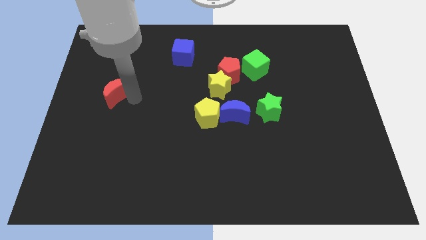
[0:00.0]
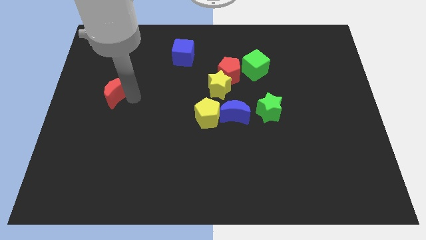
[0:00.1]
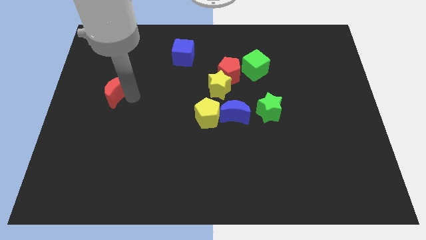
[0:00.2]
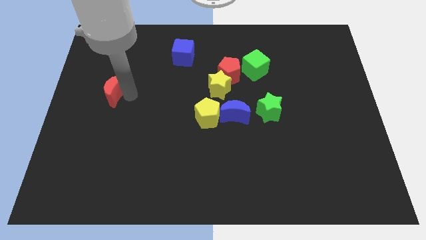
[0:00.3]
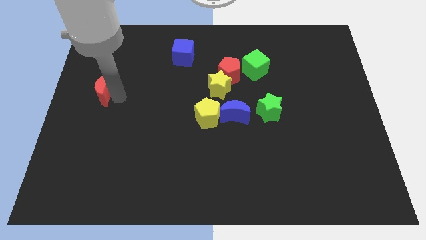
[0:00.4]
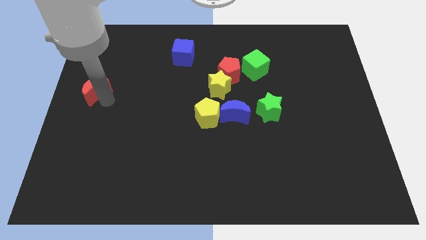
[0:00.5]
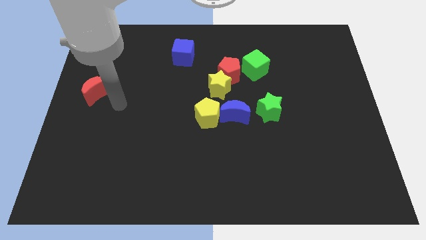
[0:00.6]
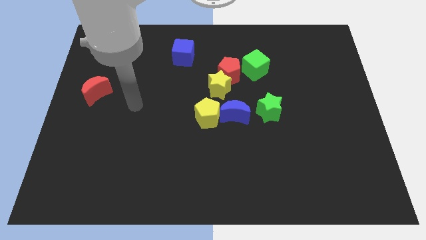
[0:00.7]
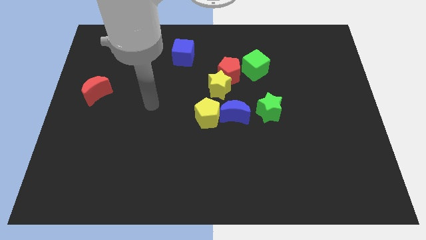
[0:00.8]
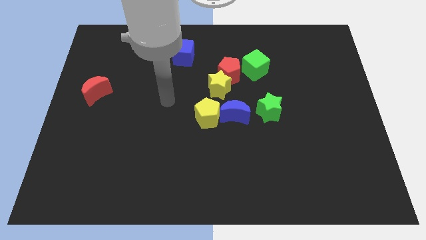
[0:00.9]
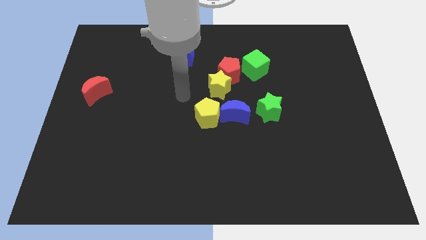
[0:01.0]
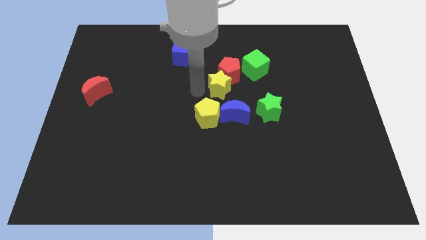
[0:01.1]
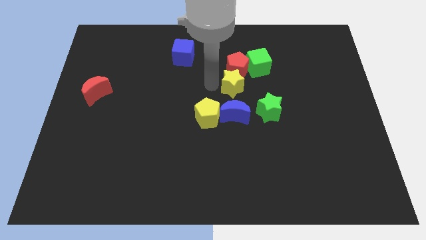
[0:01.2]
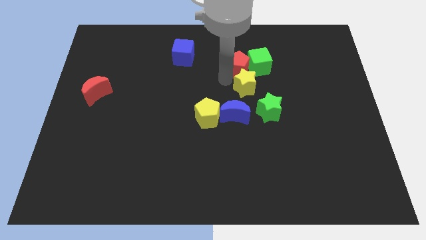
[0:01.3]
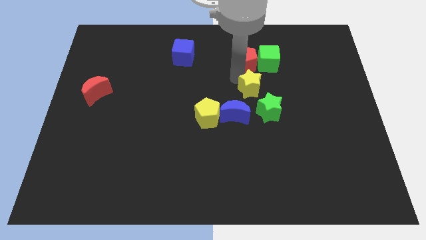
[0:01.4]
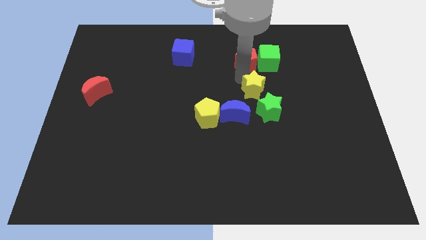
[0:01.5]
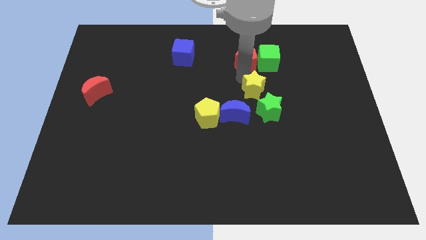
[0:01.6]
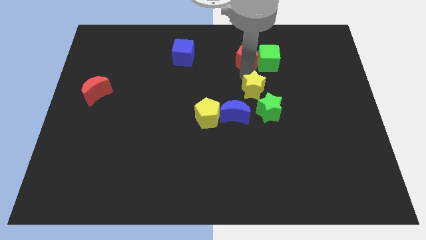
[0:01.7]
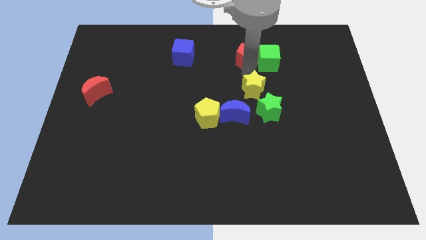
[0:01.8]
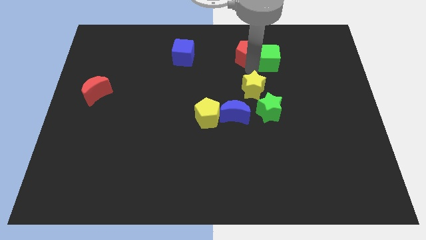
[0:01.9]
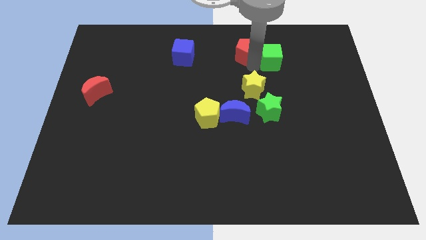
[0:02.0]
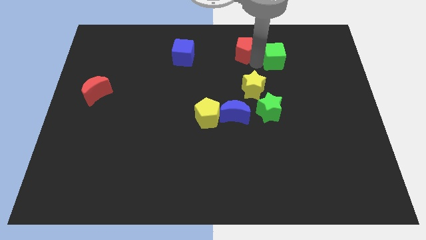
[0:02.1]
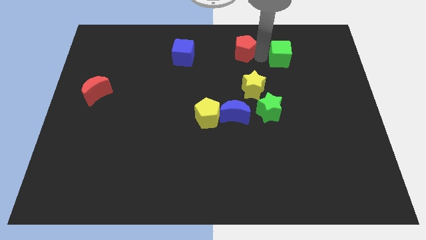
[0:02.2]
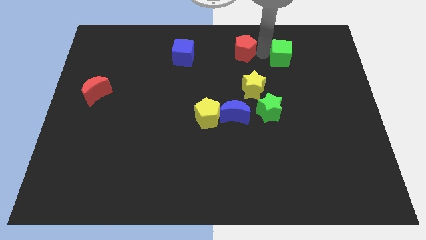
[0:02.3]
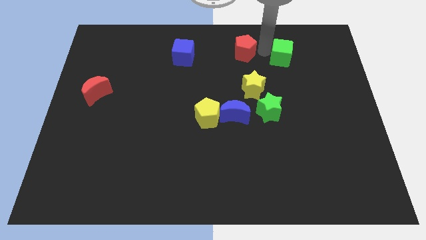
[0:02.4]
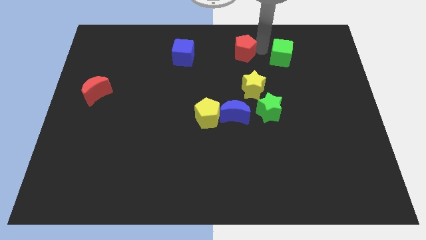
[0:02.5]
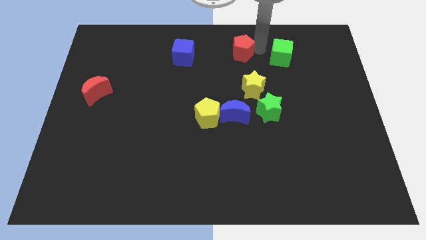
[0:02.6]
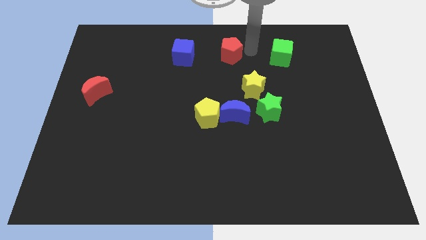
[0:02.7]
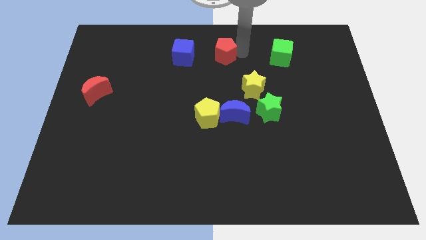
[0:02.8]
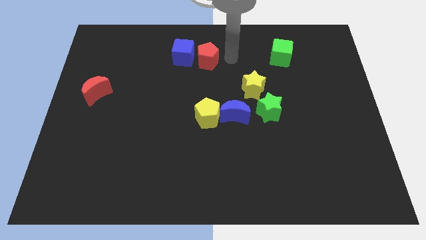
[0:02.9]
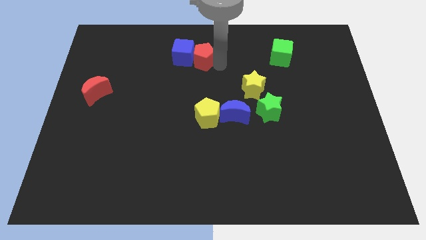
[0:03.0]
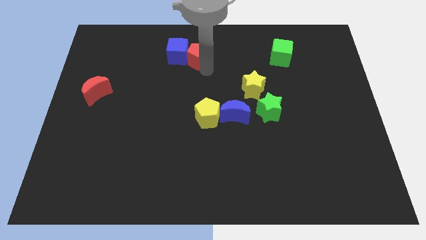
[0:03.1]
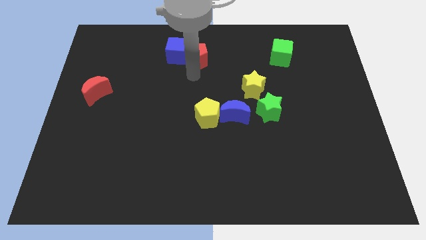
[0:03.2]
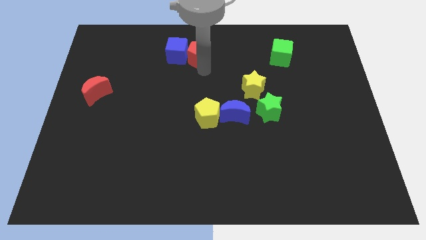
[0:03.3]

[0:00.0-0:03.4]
push the red pentagon into the blue cube

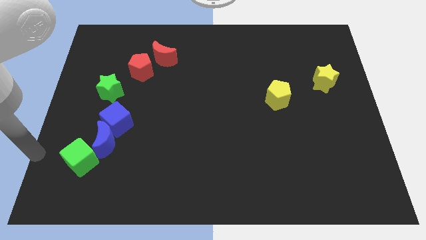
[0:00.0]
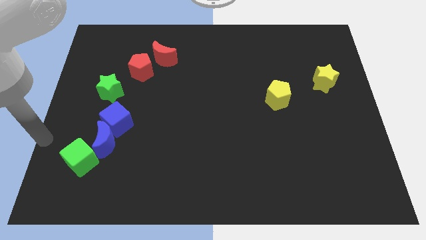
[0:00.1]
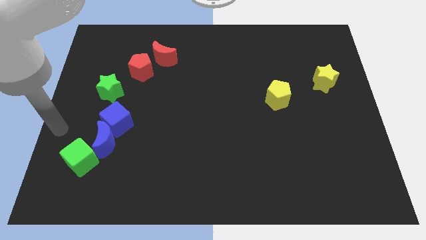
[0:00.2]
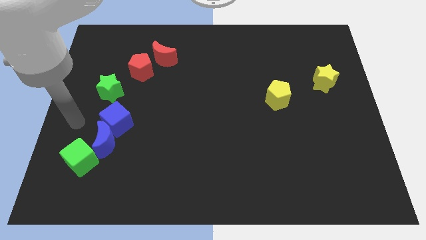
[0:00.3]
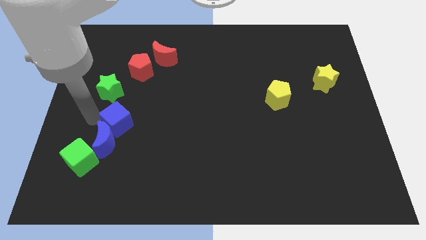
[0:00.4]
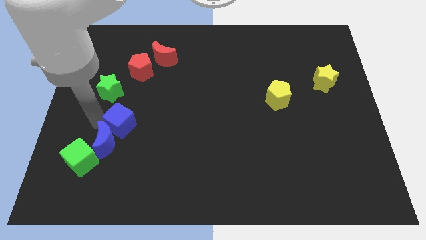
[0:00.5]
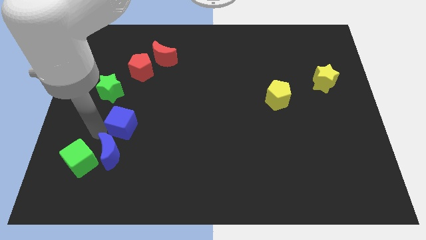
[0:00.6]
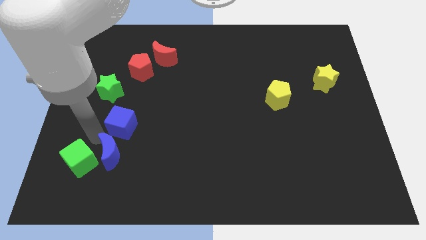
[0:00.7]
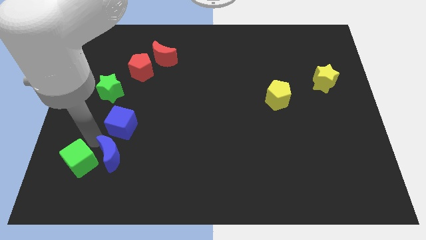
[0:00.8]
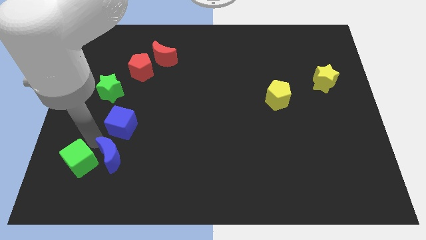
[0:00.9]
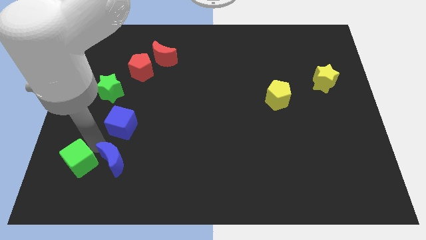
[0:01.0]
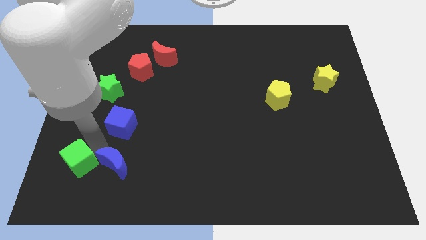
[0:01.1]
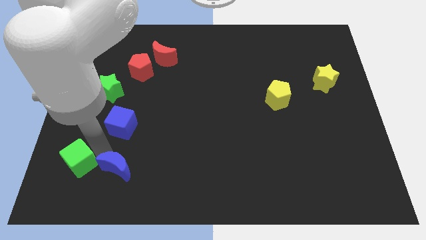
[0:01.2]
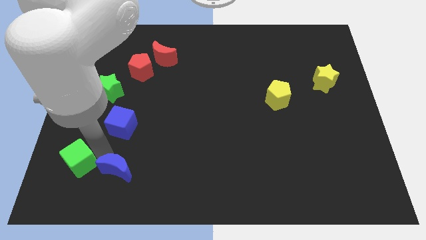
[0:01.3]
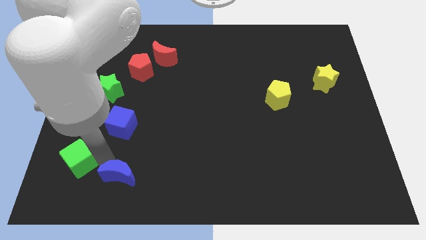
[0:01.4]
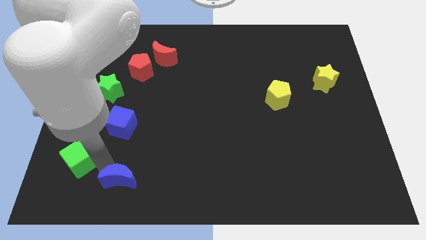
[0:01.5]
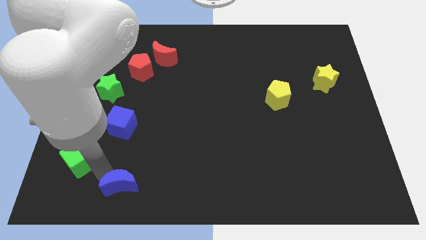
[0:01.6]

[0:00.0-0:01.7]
separate the blue crescent from the green cube and the blue cube

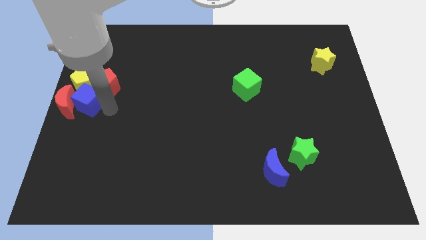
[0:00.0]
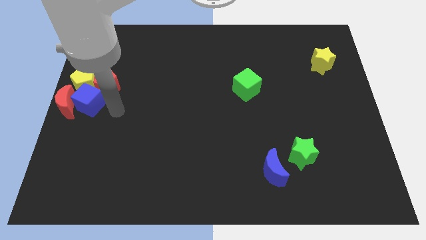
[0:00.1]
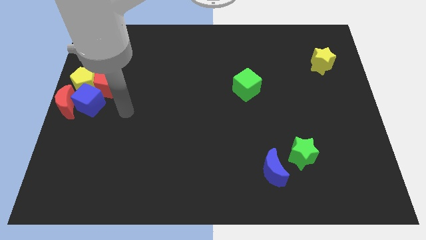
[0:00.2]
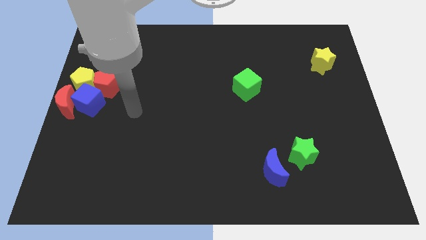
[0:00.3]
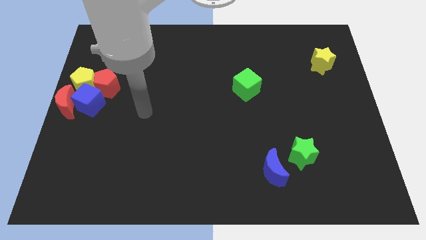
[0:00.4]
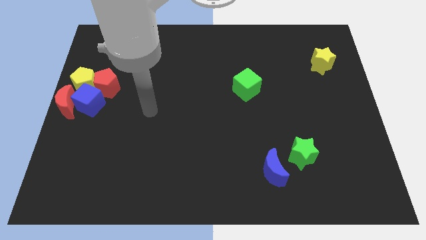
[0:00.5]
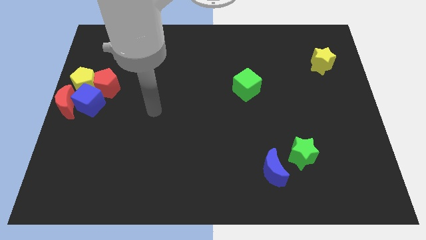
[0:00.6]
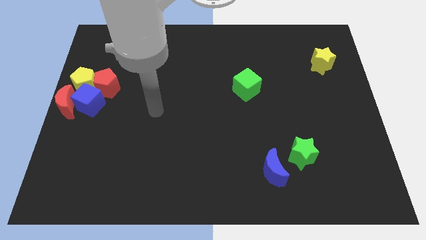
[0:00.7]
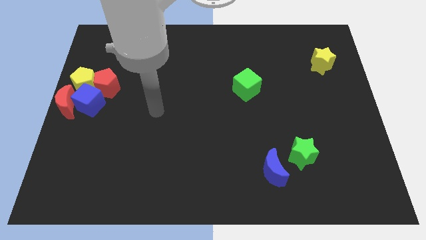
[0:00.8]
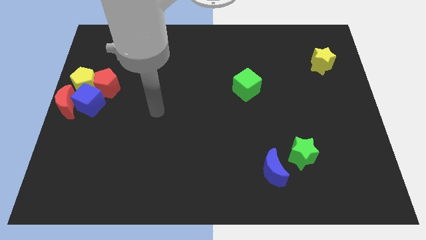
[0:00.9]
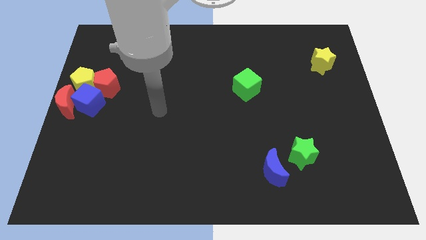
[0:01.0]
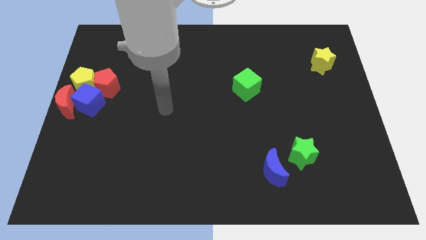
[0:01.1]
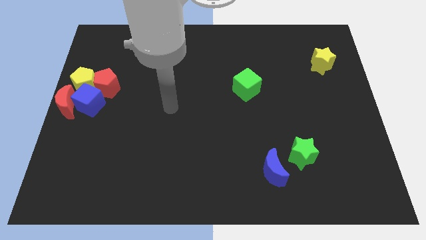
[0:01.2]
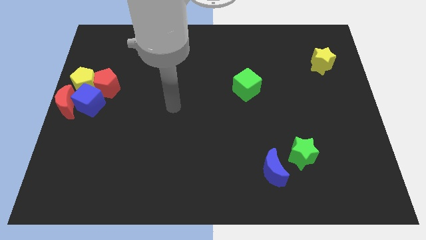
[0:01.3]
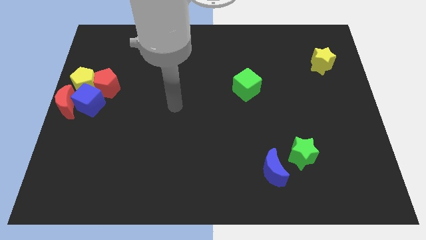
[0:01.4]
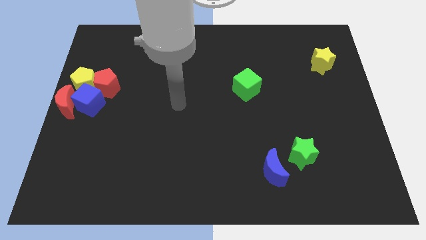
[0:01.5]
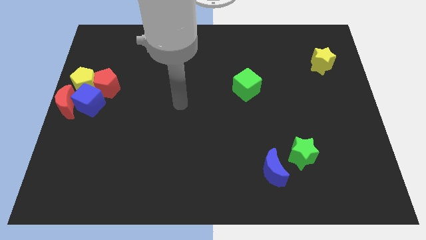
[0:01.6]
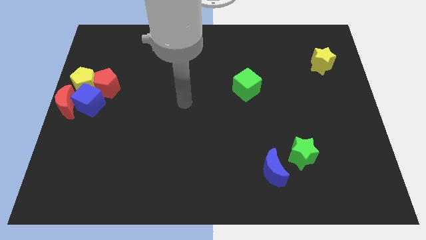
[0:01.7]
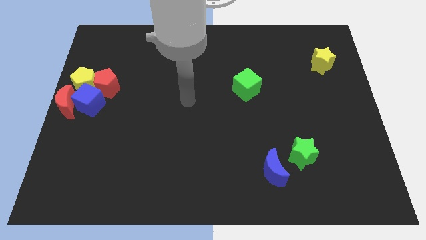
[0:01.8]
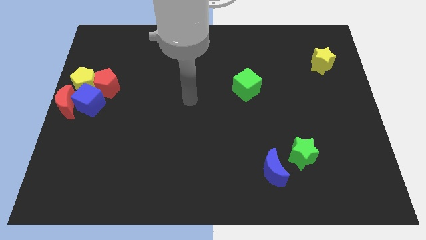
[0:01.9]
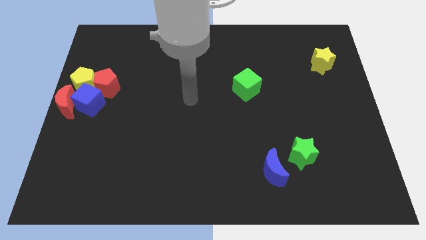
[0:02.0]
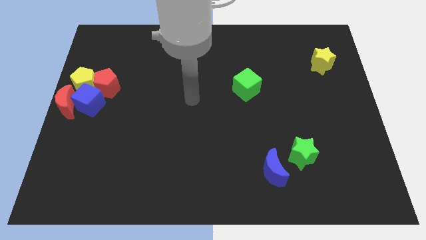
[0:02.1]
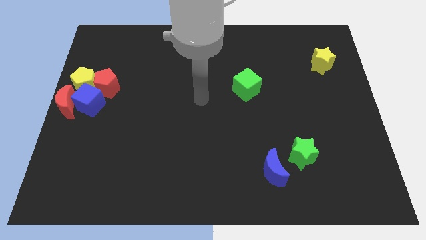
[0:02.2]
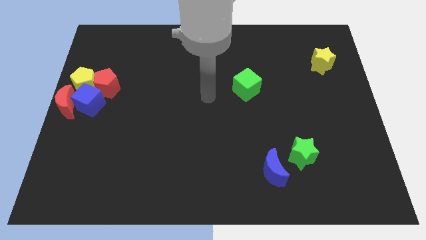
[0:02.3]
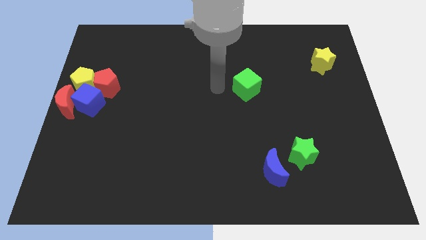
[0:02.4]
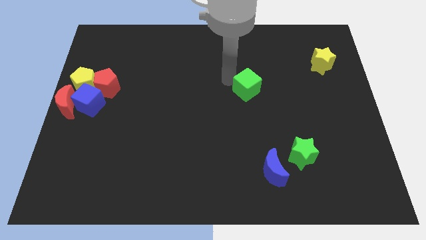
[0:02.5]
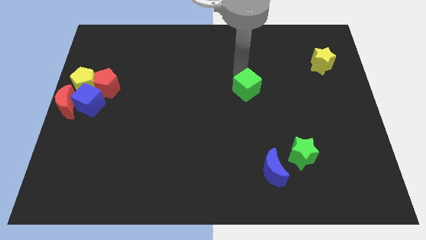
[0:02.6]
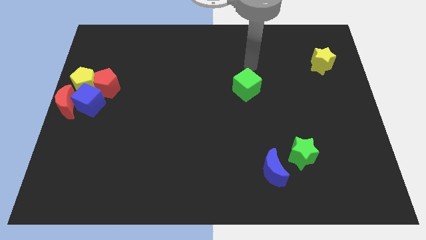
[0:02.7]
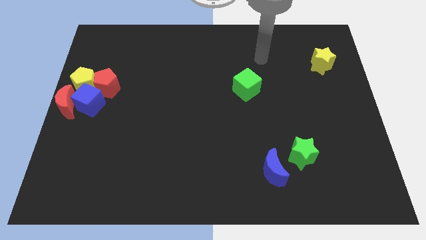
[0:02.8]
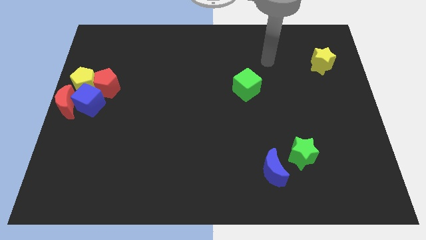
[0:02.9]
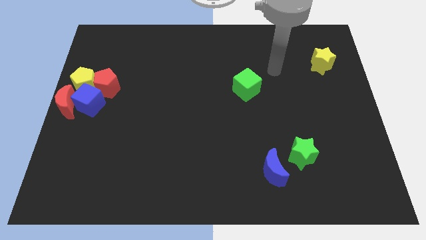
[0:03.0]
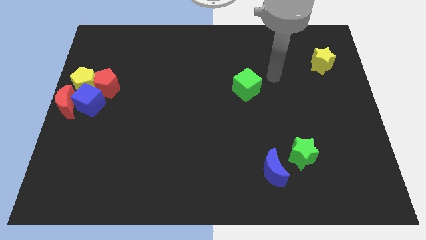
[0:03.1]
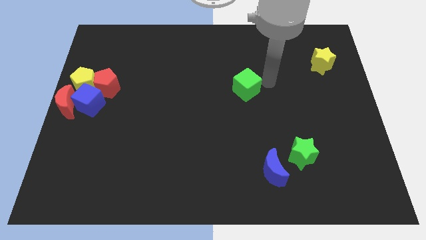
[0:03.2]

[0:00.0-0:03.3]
move your arm to the right side of the green cube

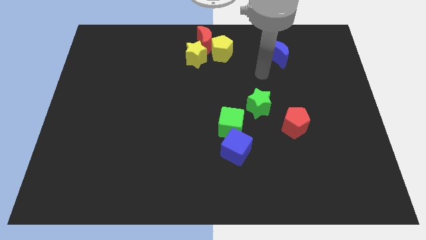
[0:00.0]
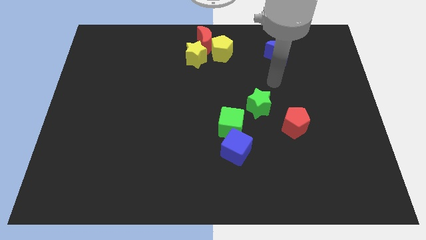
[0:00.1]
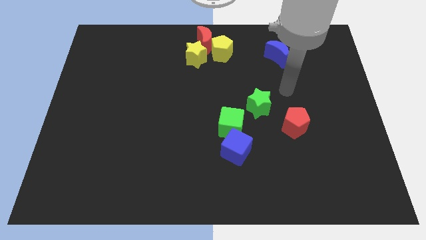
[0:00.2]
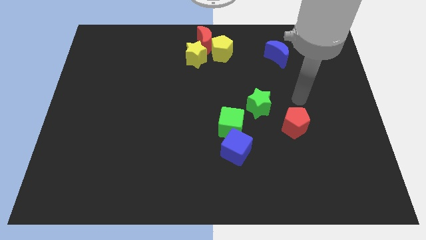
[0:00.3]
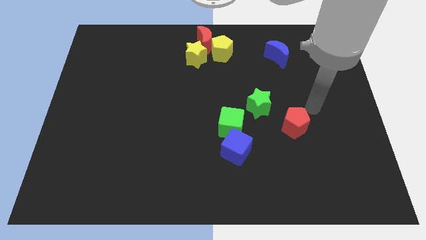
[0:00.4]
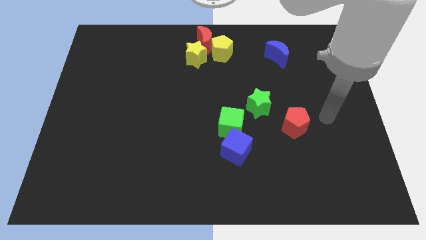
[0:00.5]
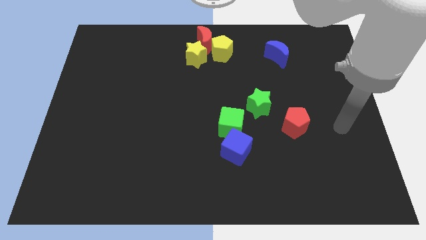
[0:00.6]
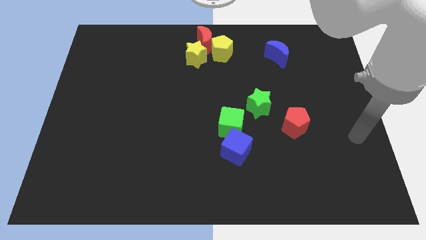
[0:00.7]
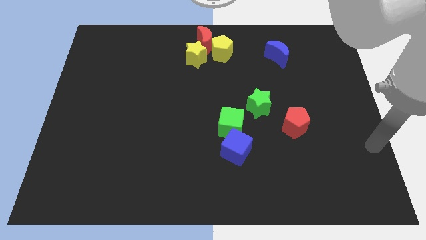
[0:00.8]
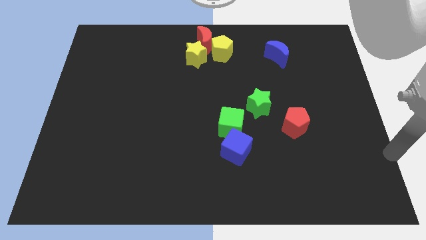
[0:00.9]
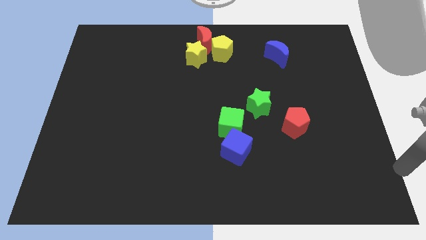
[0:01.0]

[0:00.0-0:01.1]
move your hand towards the bottom right of the board
